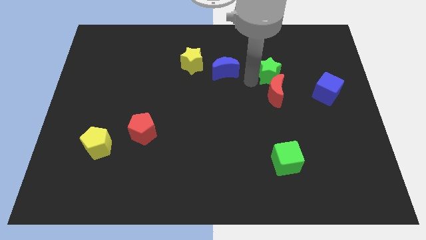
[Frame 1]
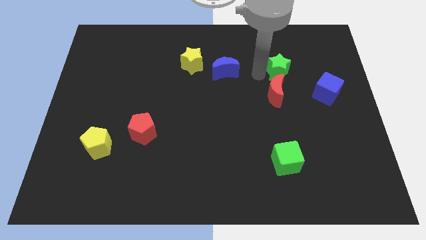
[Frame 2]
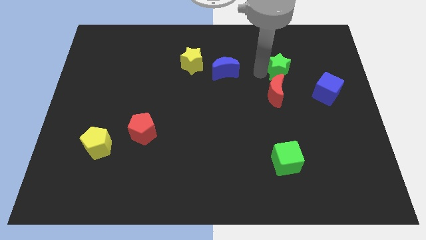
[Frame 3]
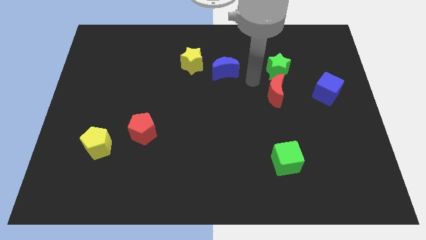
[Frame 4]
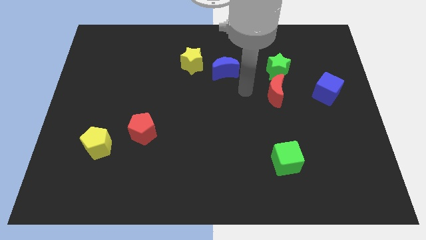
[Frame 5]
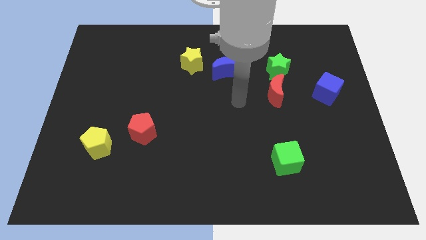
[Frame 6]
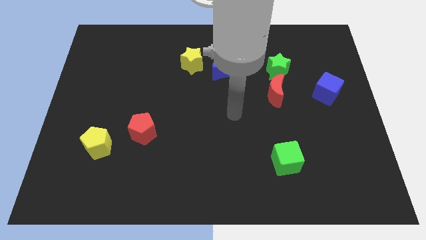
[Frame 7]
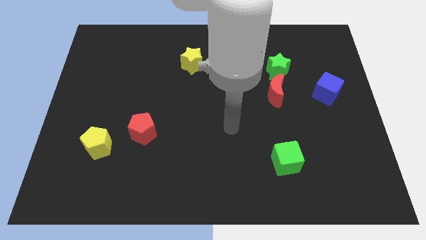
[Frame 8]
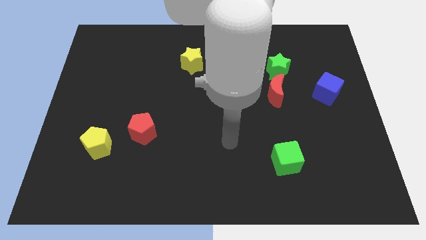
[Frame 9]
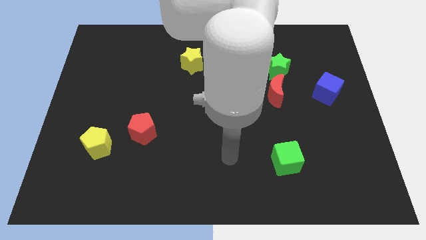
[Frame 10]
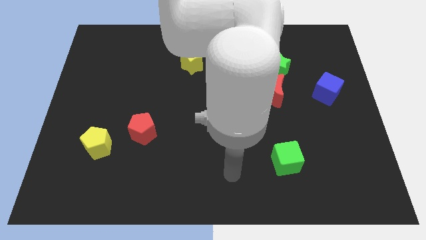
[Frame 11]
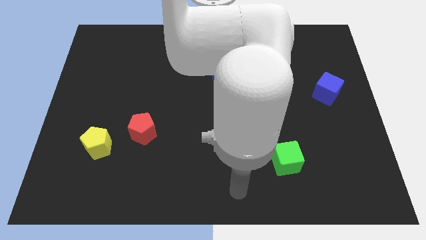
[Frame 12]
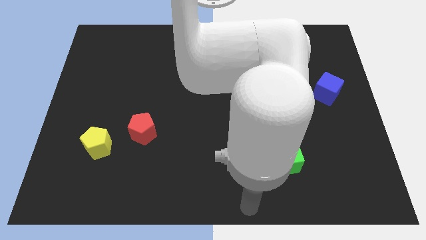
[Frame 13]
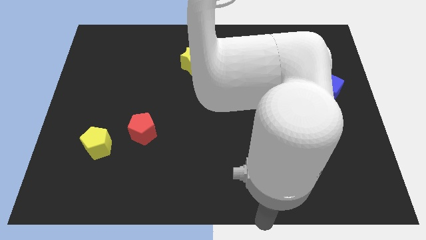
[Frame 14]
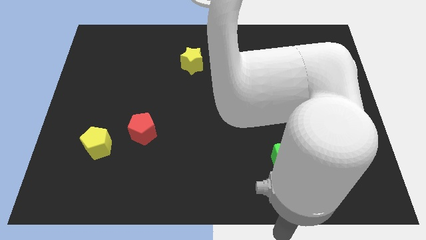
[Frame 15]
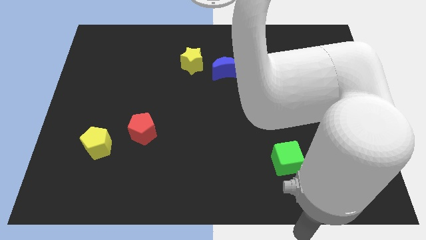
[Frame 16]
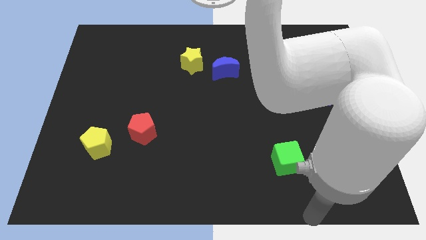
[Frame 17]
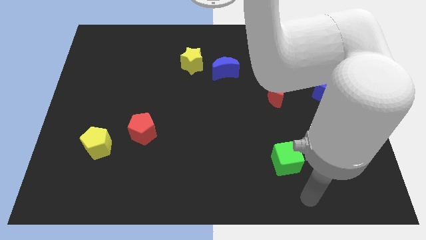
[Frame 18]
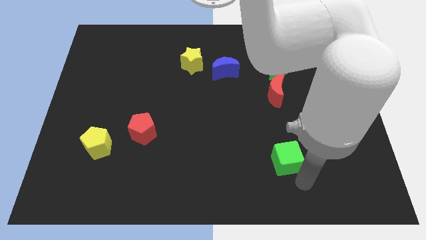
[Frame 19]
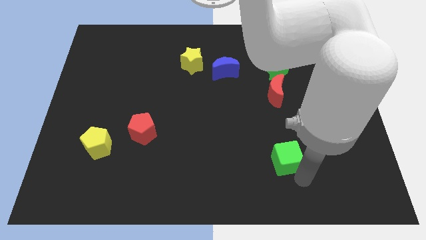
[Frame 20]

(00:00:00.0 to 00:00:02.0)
place the arm below the green cube

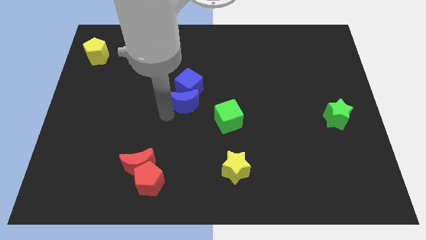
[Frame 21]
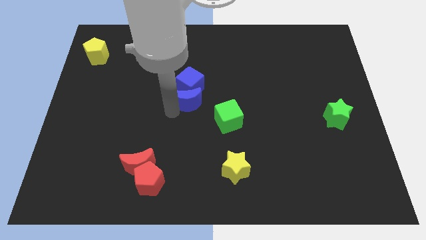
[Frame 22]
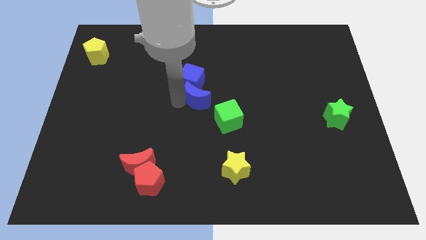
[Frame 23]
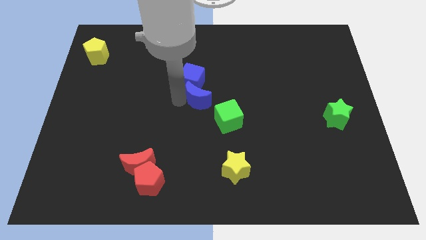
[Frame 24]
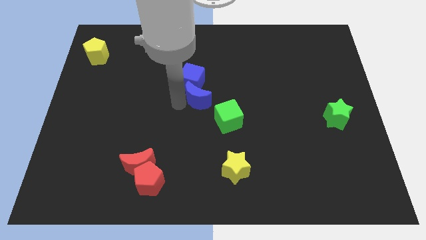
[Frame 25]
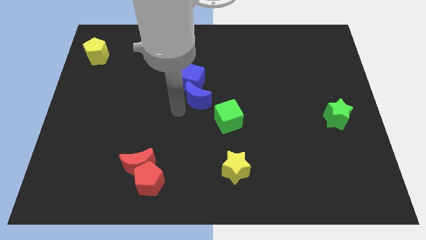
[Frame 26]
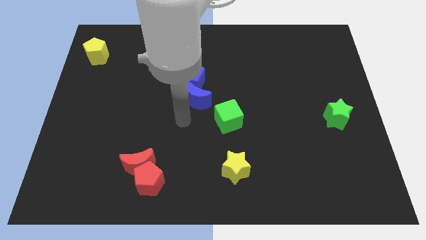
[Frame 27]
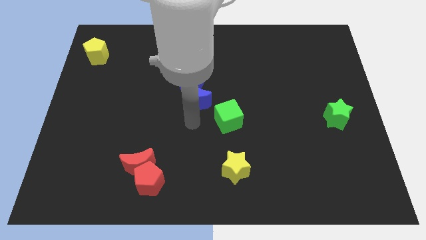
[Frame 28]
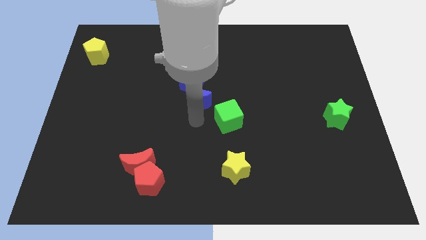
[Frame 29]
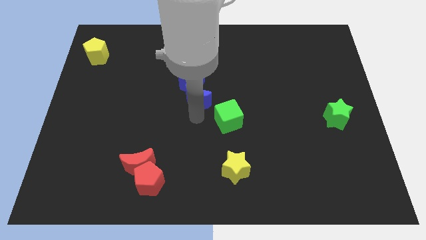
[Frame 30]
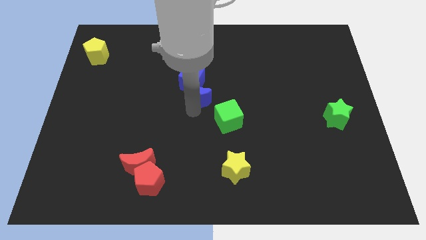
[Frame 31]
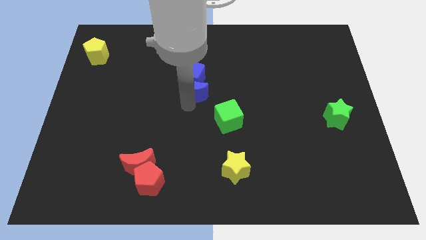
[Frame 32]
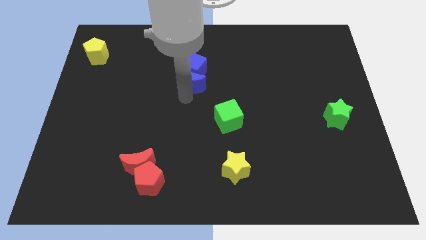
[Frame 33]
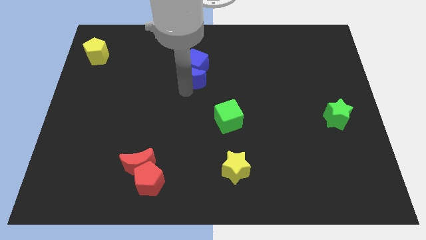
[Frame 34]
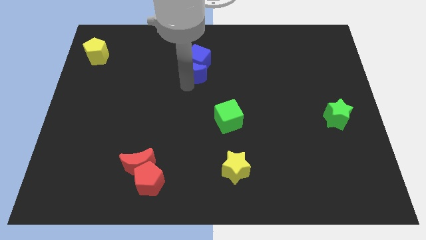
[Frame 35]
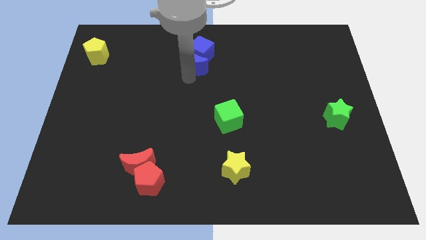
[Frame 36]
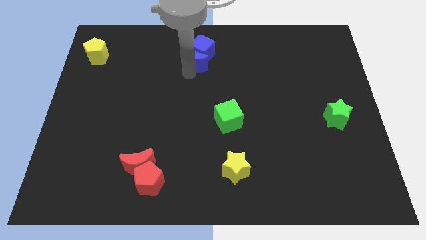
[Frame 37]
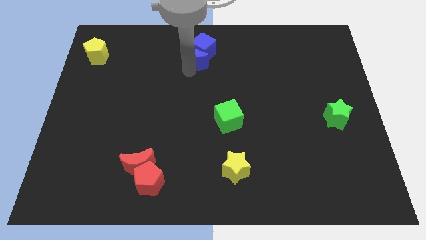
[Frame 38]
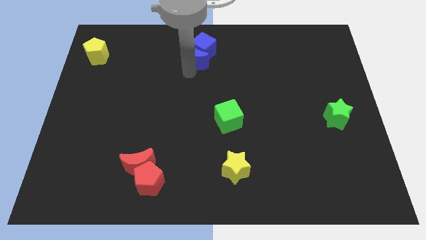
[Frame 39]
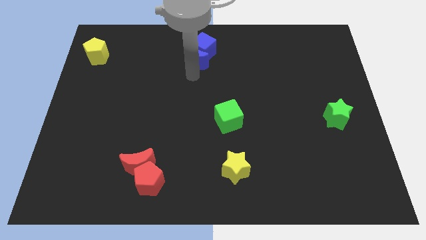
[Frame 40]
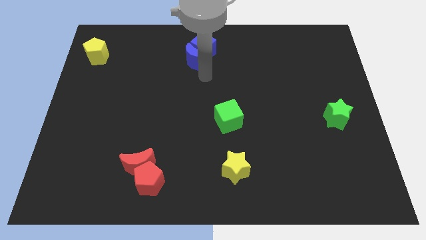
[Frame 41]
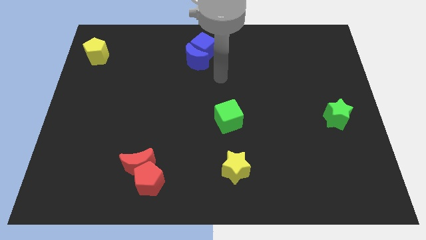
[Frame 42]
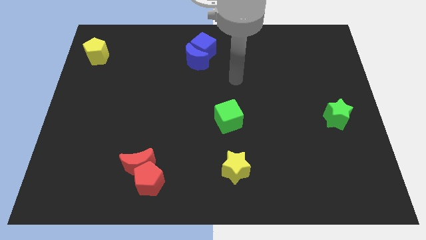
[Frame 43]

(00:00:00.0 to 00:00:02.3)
push the blue cube towards the top center with the blue moon

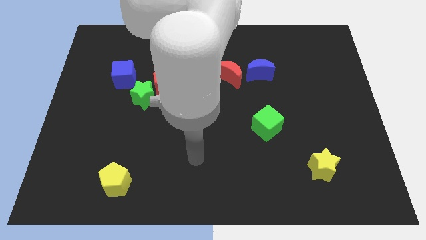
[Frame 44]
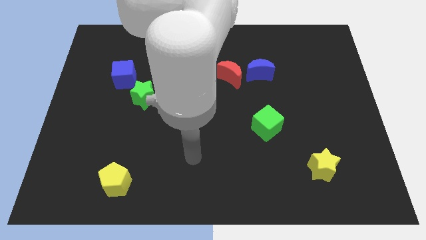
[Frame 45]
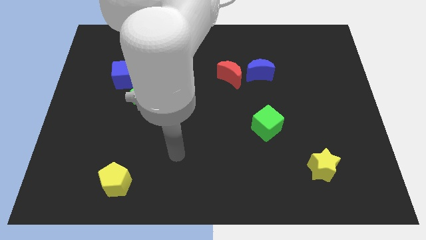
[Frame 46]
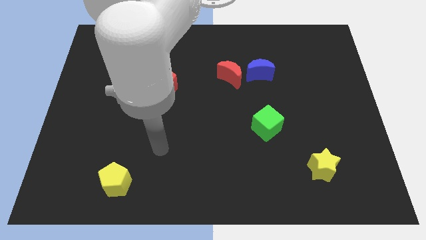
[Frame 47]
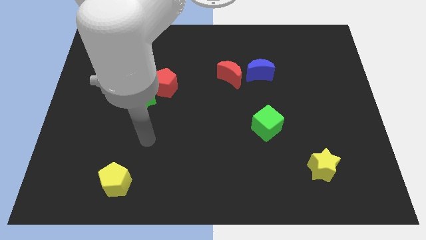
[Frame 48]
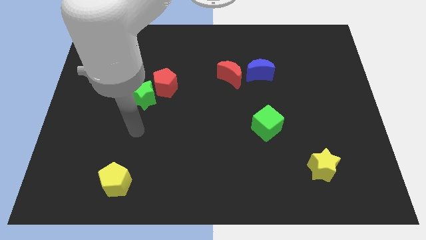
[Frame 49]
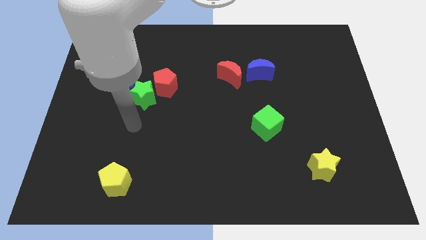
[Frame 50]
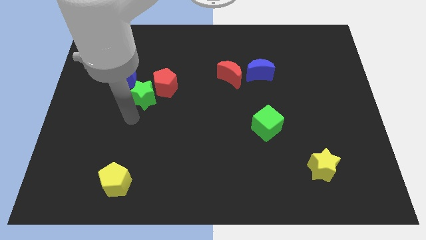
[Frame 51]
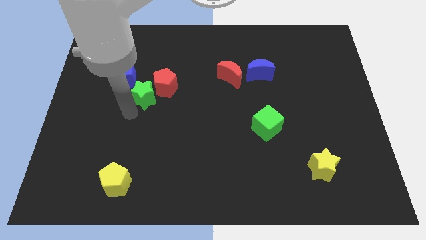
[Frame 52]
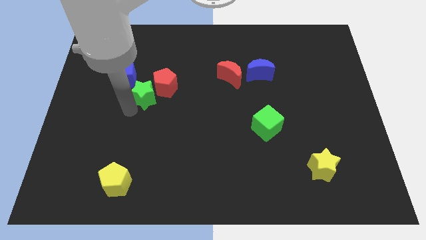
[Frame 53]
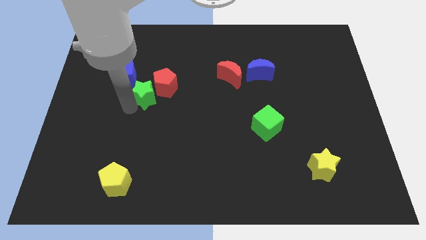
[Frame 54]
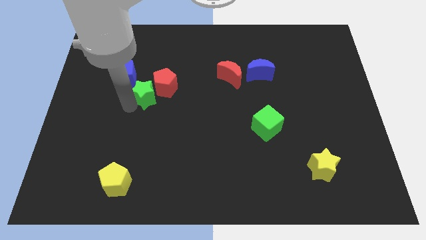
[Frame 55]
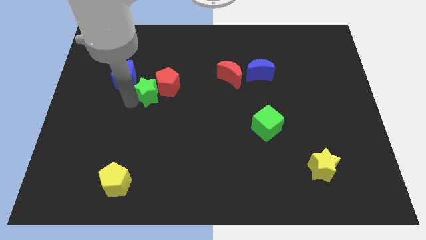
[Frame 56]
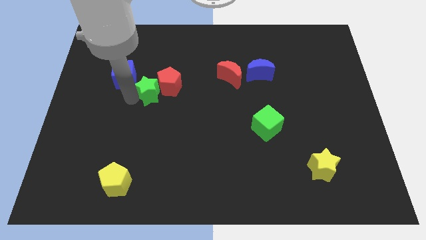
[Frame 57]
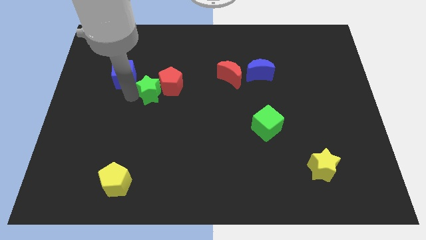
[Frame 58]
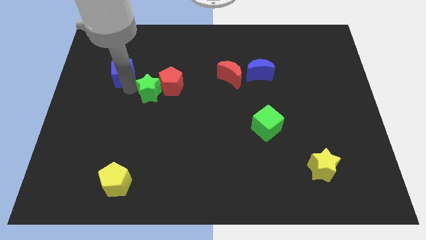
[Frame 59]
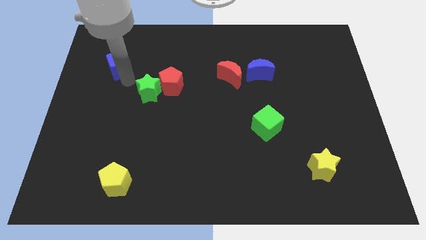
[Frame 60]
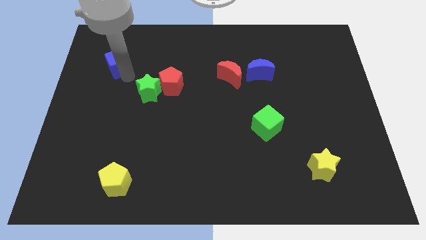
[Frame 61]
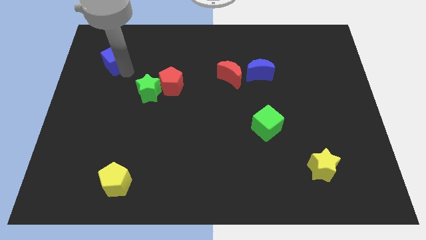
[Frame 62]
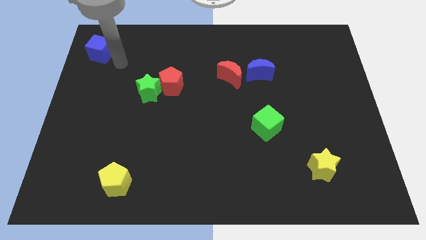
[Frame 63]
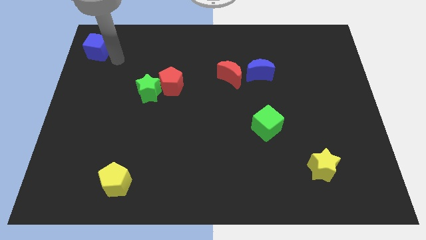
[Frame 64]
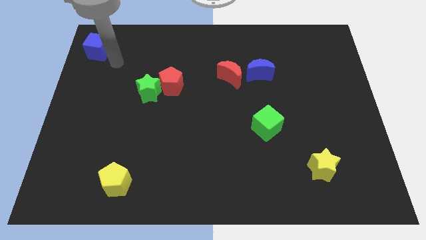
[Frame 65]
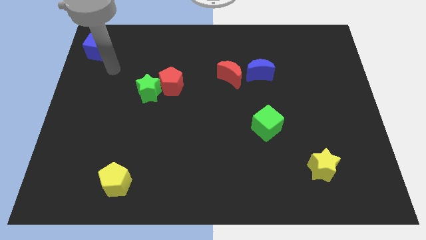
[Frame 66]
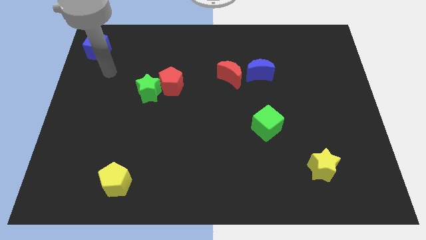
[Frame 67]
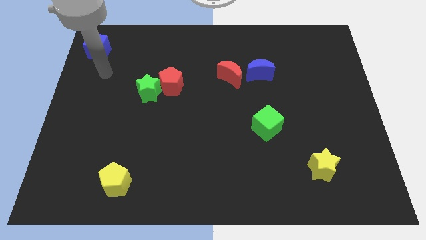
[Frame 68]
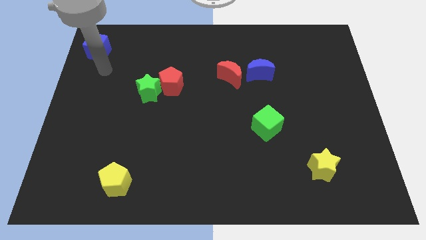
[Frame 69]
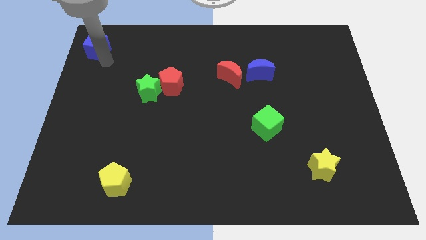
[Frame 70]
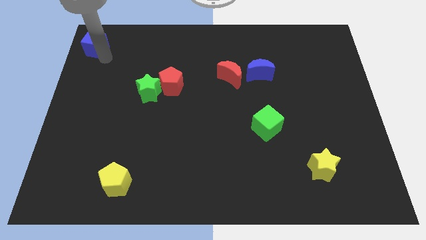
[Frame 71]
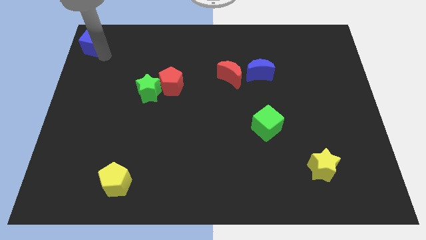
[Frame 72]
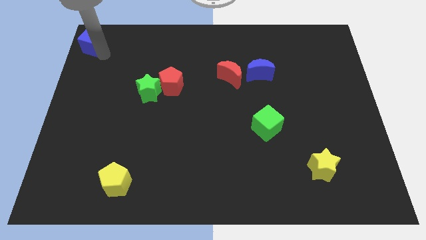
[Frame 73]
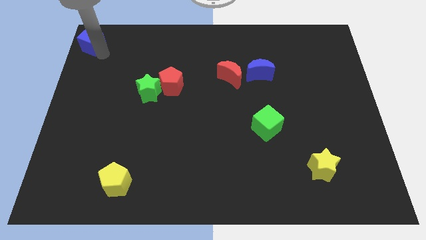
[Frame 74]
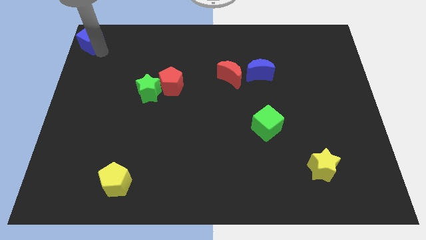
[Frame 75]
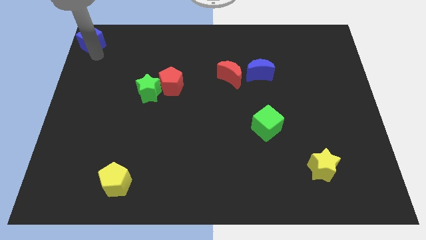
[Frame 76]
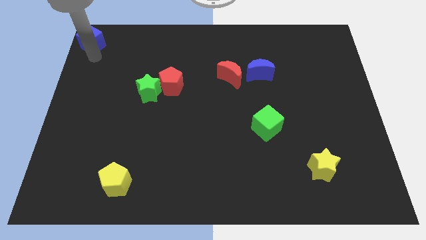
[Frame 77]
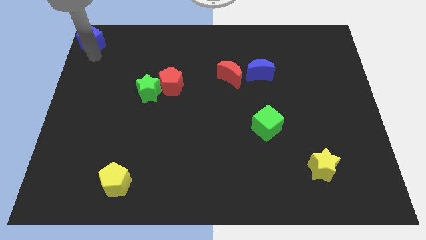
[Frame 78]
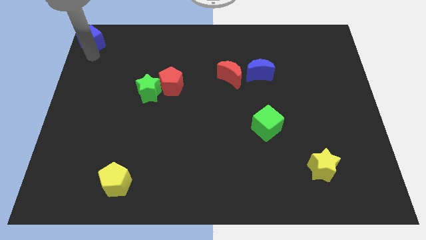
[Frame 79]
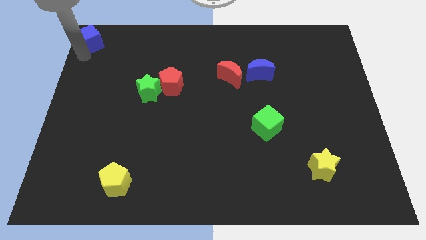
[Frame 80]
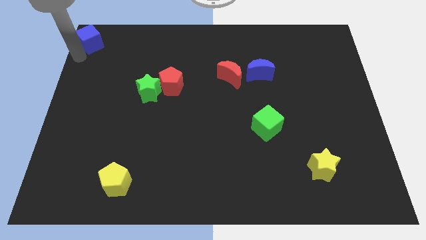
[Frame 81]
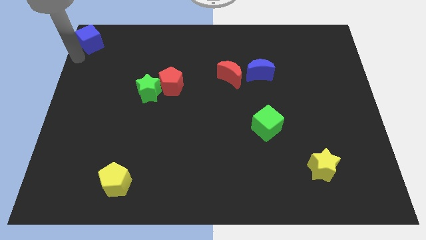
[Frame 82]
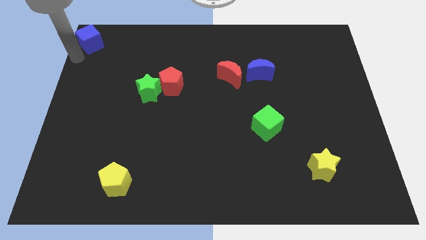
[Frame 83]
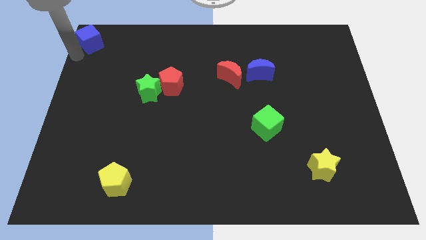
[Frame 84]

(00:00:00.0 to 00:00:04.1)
place the blue cube at the top left corner

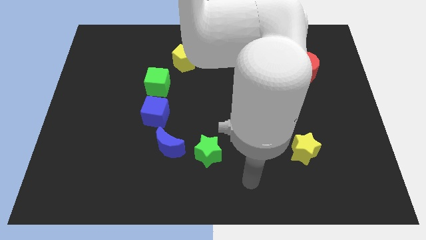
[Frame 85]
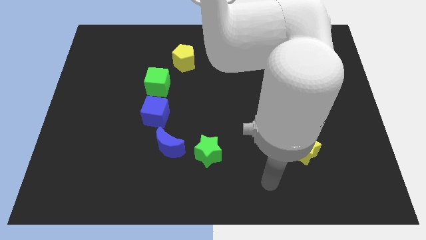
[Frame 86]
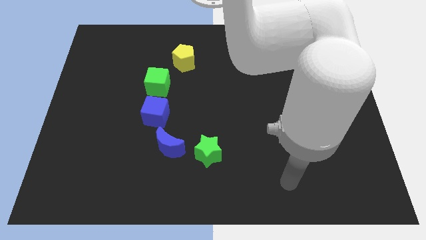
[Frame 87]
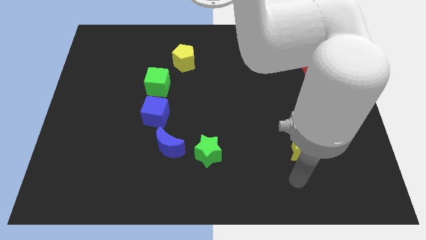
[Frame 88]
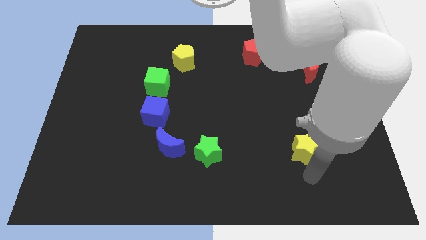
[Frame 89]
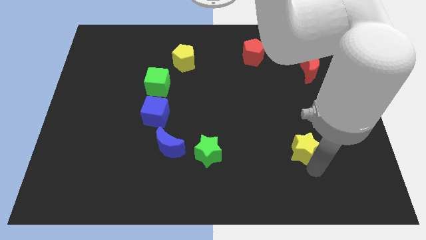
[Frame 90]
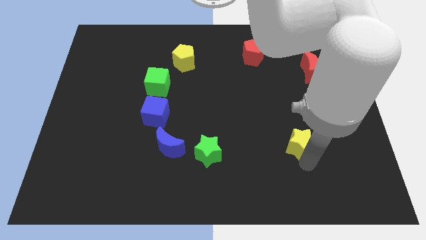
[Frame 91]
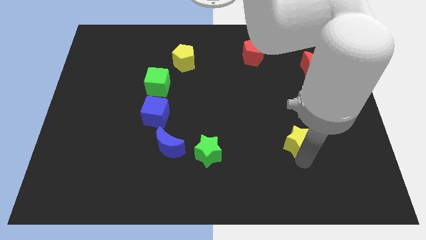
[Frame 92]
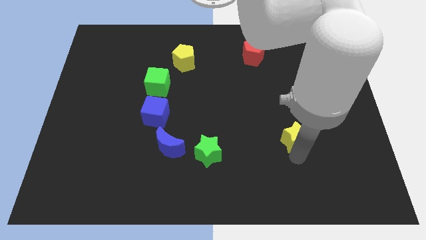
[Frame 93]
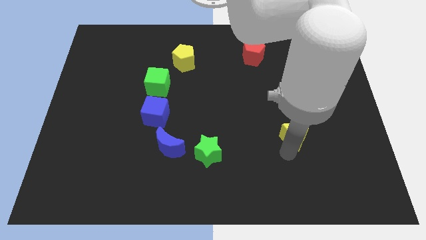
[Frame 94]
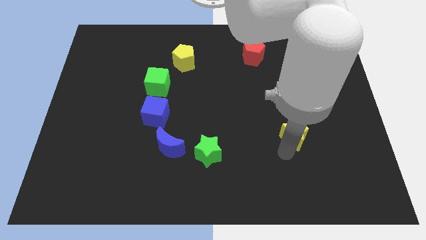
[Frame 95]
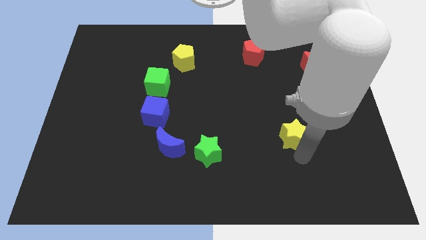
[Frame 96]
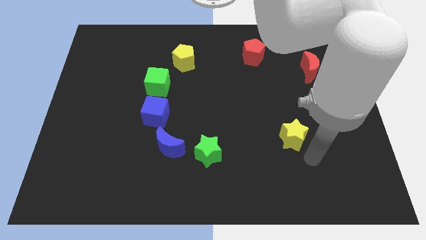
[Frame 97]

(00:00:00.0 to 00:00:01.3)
slightly push the yellow star upwards
